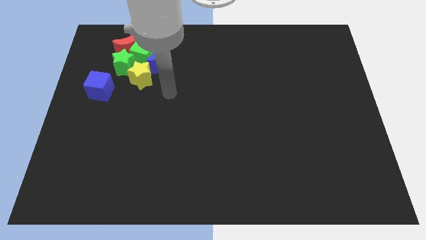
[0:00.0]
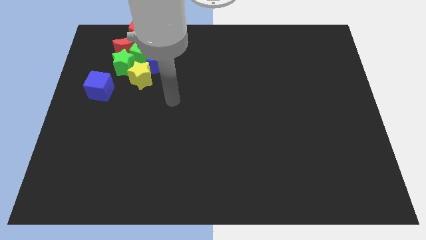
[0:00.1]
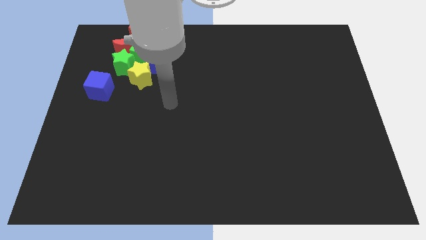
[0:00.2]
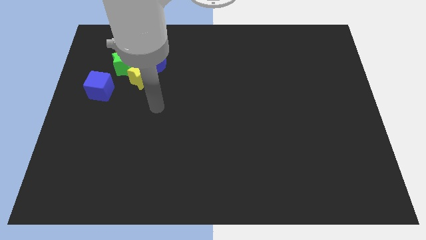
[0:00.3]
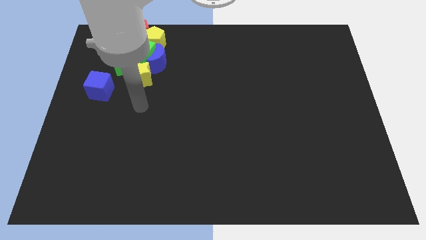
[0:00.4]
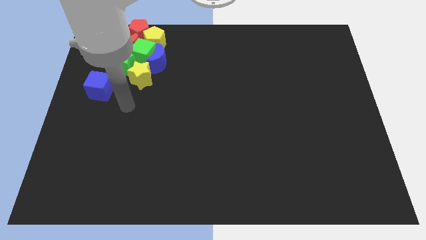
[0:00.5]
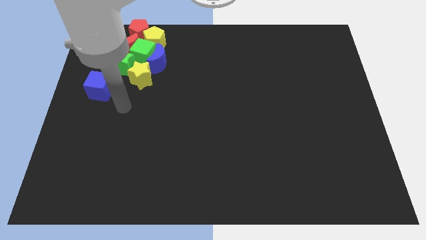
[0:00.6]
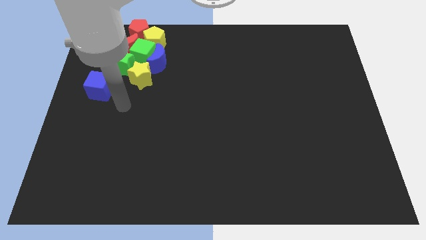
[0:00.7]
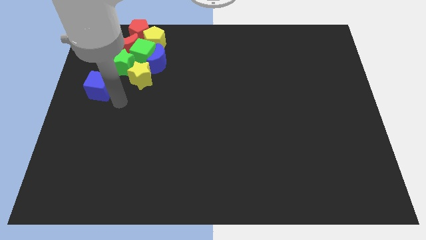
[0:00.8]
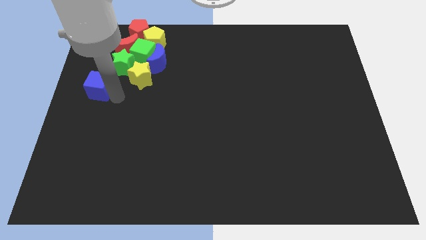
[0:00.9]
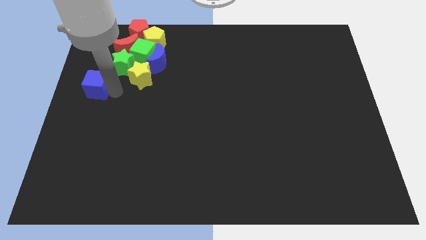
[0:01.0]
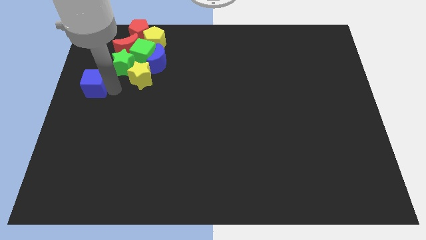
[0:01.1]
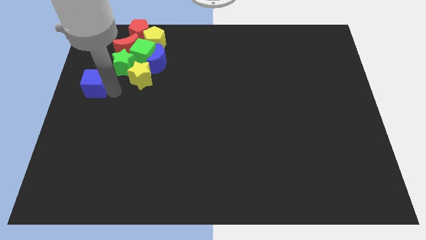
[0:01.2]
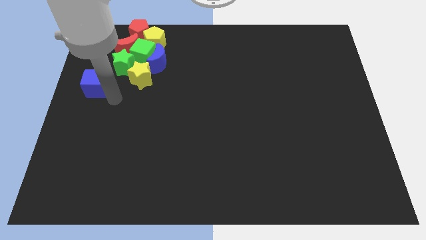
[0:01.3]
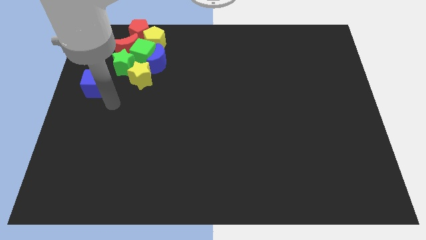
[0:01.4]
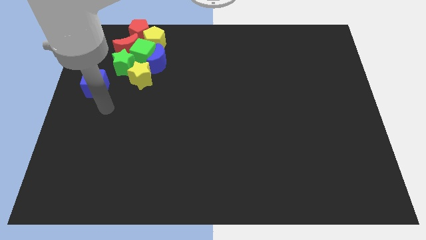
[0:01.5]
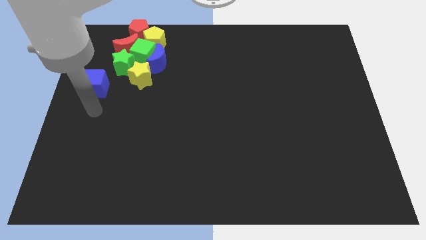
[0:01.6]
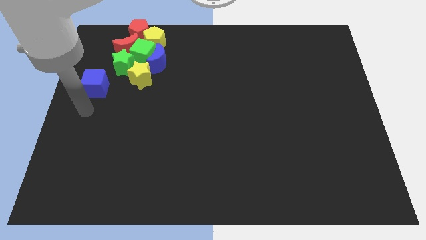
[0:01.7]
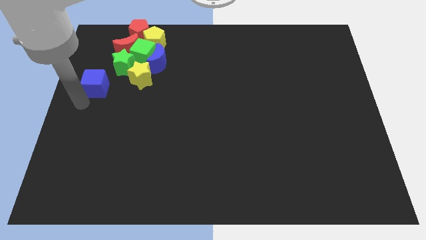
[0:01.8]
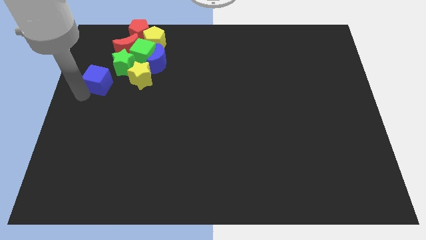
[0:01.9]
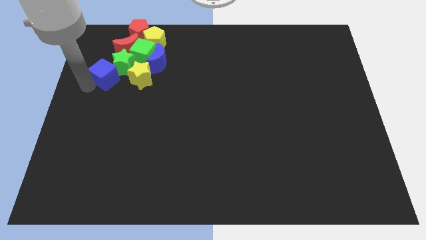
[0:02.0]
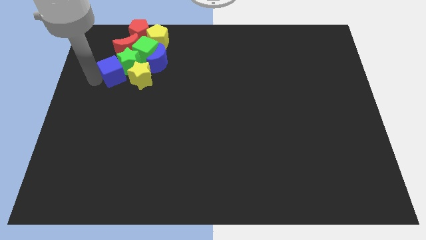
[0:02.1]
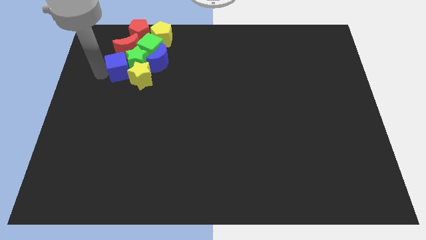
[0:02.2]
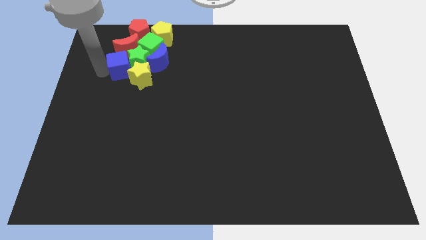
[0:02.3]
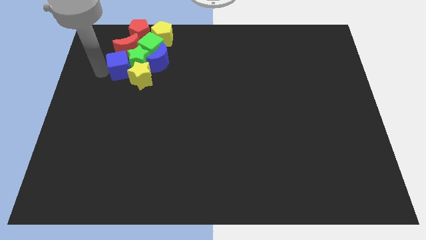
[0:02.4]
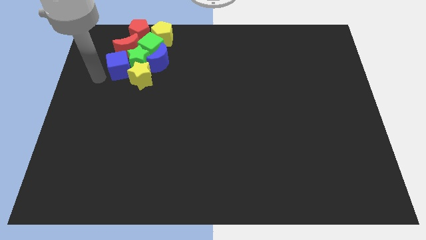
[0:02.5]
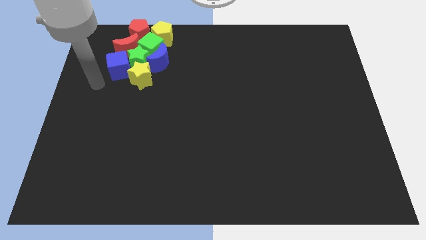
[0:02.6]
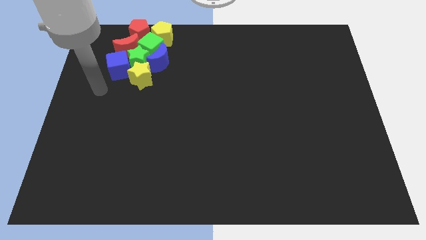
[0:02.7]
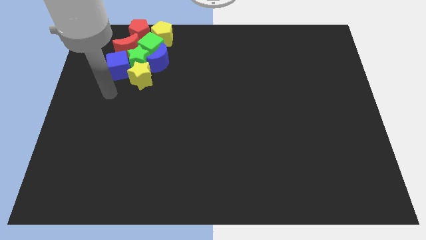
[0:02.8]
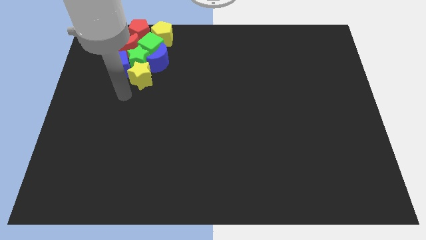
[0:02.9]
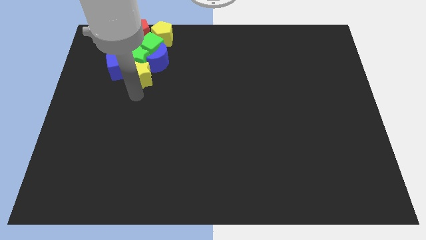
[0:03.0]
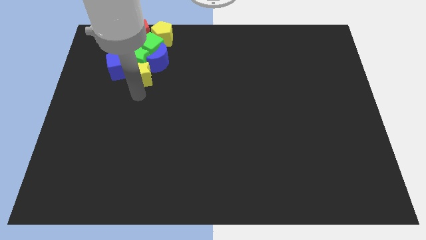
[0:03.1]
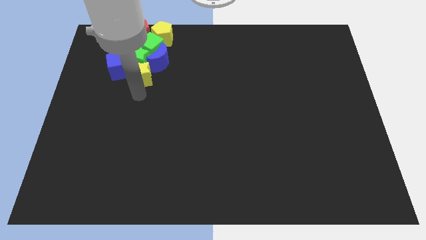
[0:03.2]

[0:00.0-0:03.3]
move the blue cube into the group of blocks

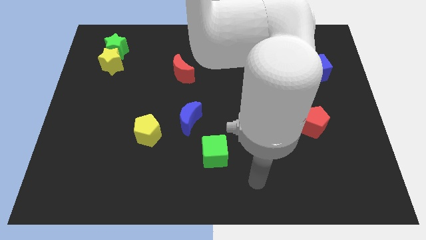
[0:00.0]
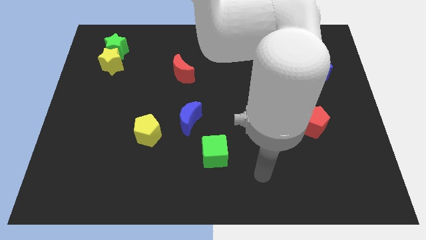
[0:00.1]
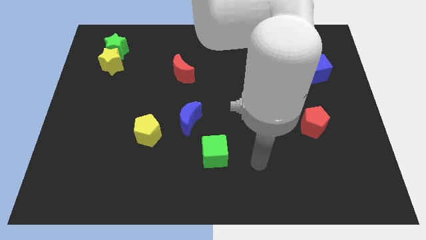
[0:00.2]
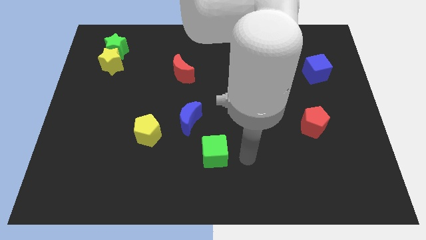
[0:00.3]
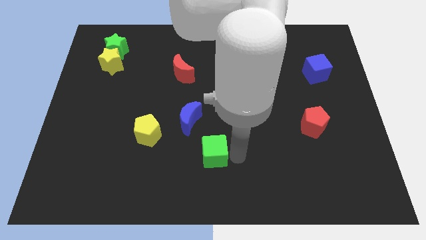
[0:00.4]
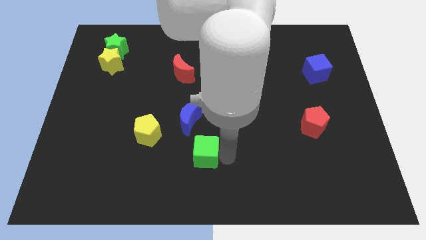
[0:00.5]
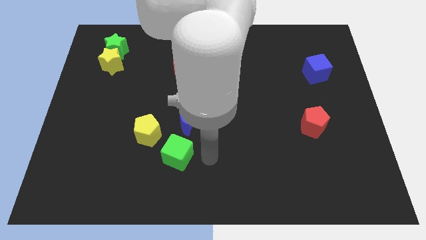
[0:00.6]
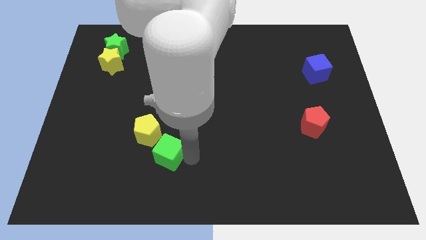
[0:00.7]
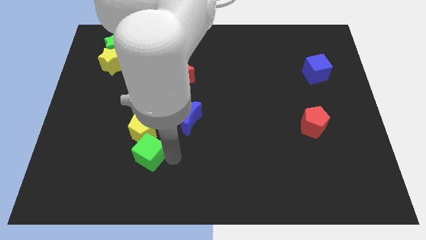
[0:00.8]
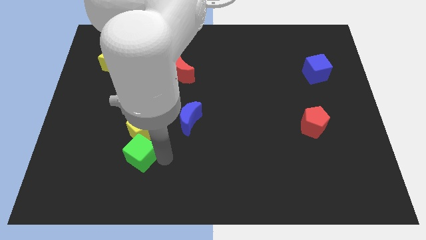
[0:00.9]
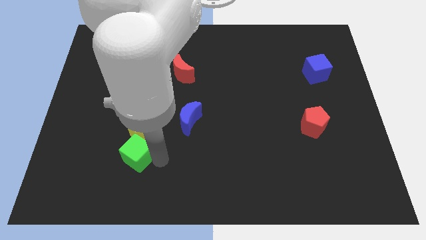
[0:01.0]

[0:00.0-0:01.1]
push the green cube close to the yellow pentagon

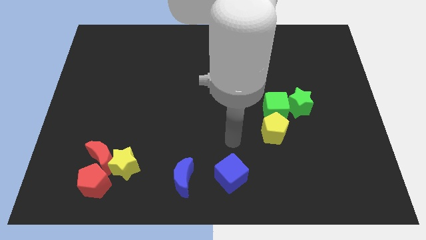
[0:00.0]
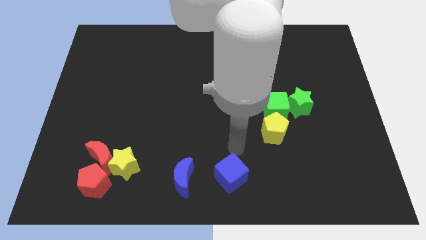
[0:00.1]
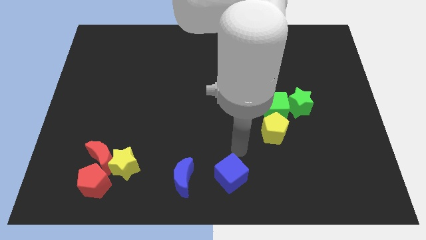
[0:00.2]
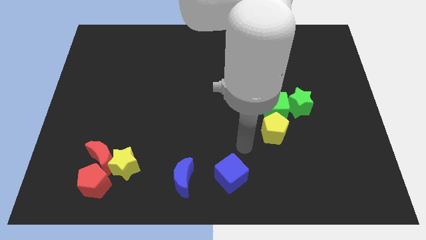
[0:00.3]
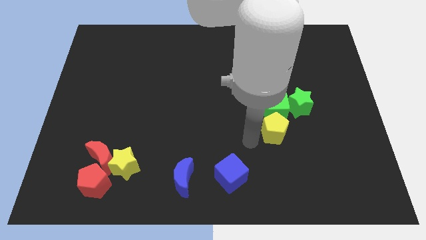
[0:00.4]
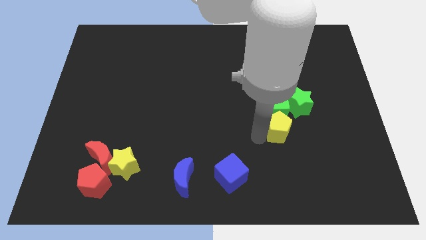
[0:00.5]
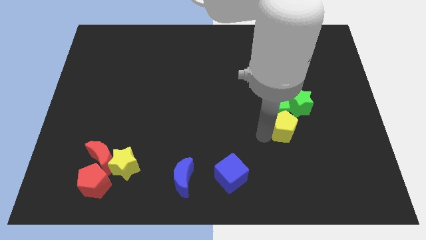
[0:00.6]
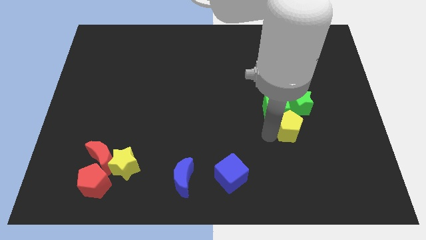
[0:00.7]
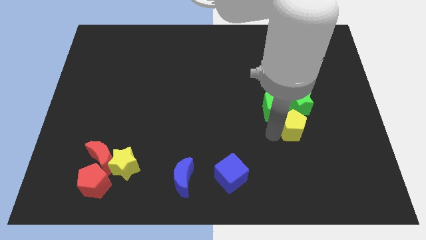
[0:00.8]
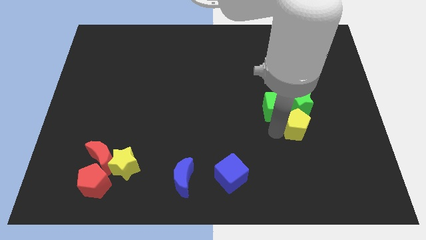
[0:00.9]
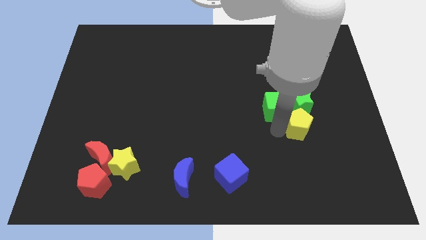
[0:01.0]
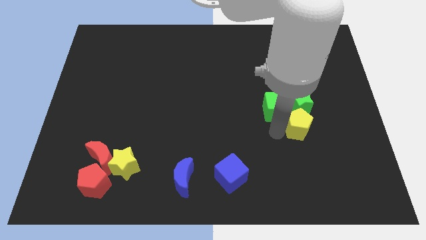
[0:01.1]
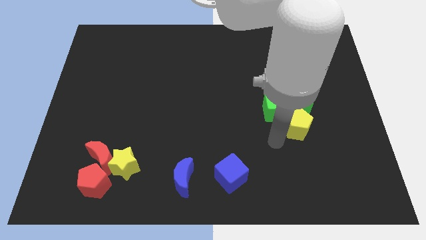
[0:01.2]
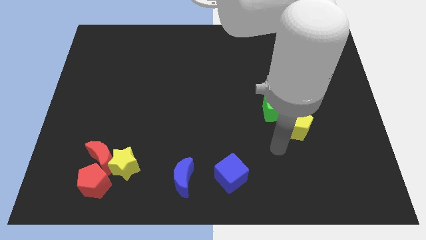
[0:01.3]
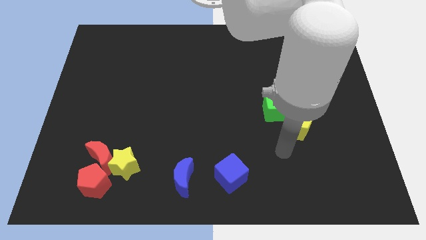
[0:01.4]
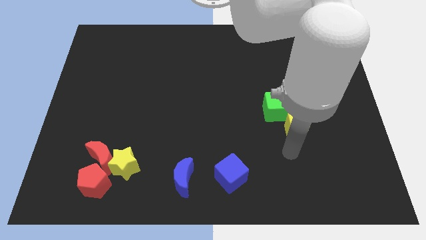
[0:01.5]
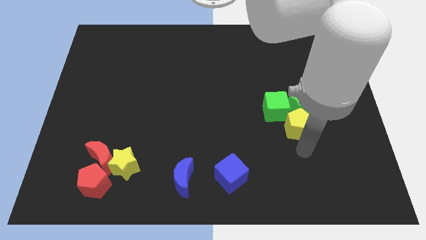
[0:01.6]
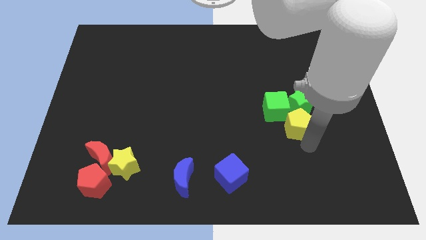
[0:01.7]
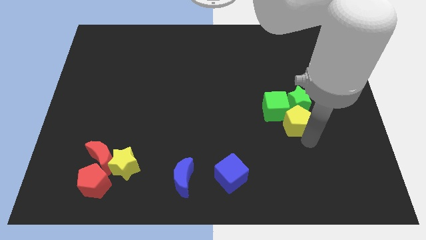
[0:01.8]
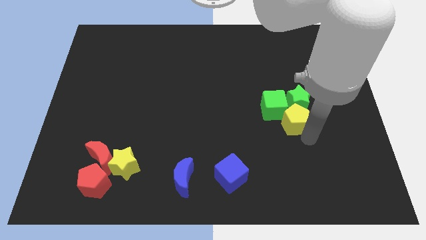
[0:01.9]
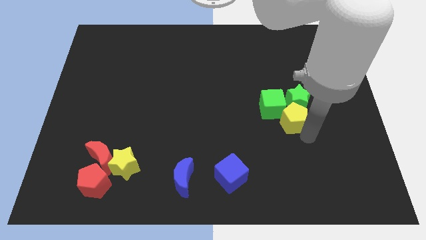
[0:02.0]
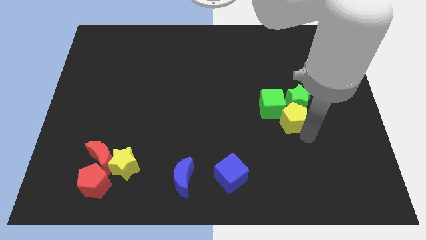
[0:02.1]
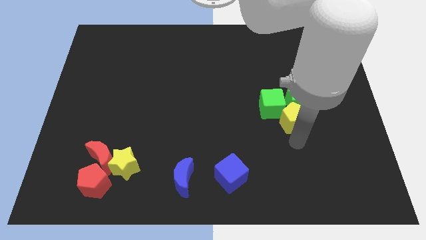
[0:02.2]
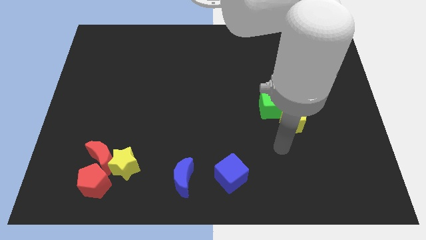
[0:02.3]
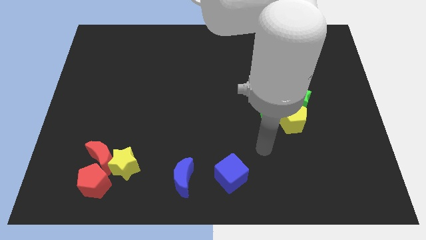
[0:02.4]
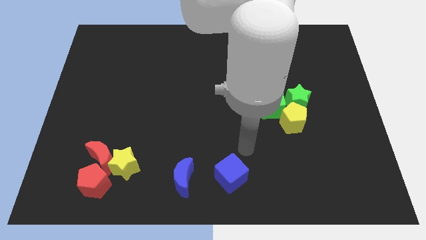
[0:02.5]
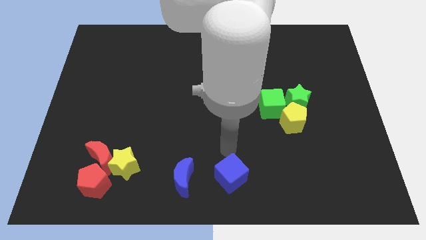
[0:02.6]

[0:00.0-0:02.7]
move the yellow pentagon to the bottom of the green star

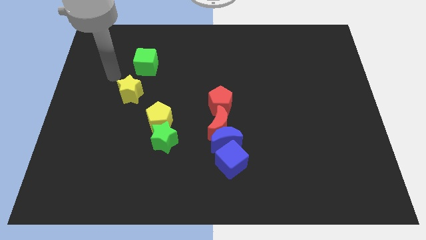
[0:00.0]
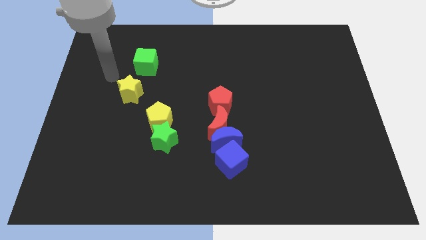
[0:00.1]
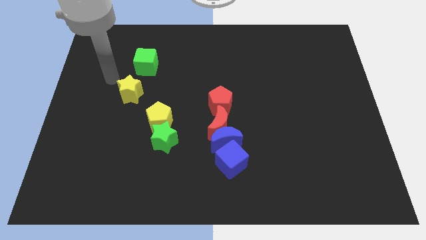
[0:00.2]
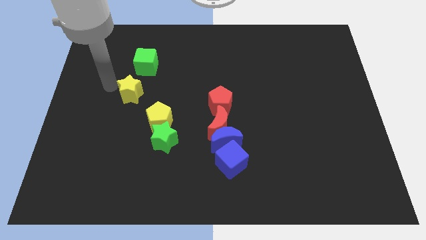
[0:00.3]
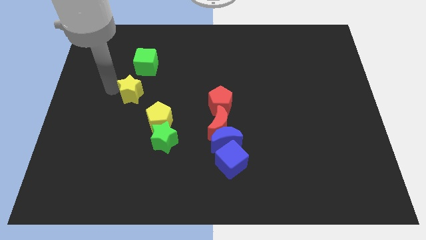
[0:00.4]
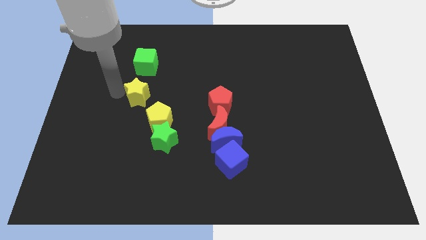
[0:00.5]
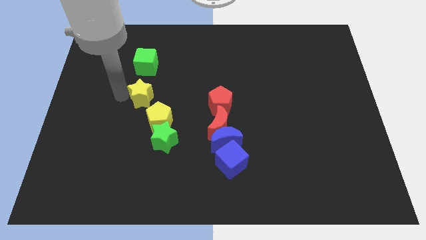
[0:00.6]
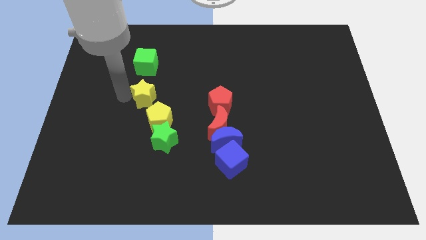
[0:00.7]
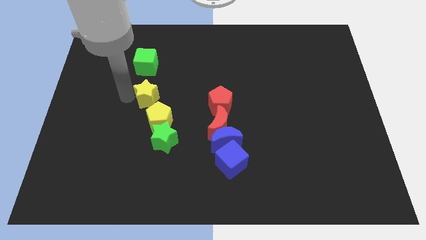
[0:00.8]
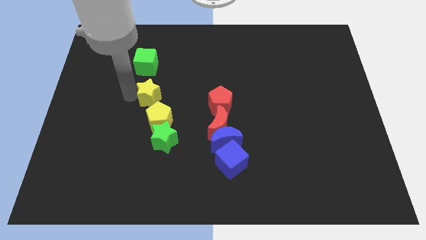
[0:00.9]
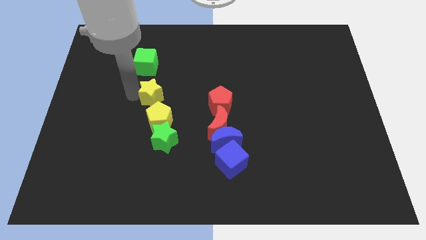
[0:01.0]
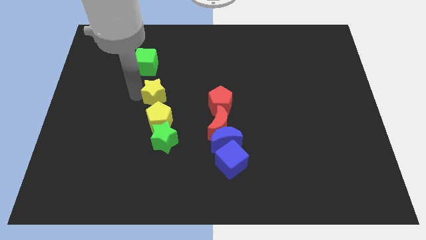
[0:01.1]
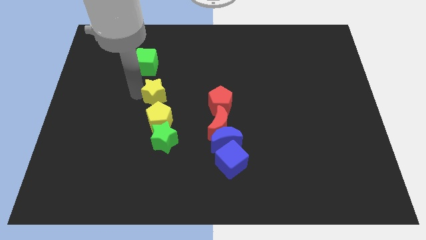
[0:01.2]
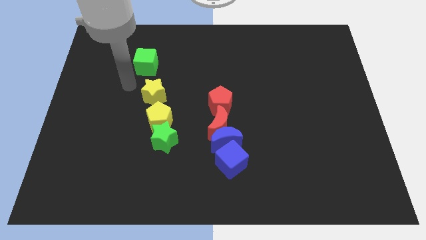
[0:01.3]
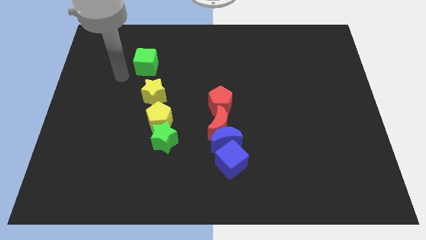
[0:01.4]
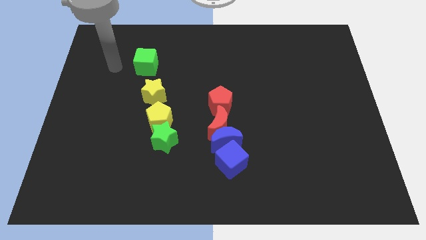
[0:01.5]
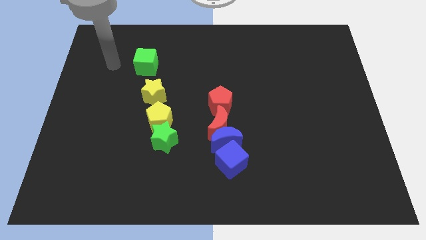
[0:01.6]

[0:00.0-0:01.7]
move the yellow star diagonally in between the green cube and yellow pentagon

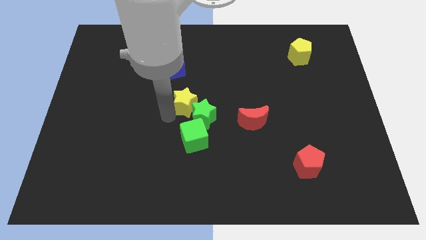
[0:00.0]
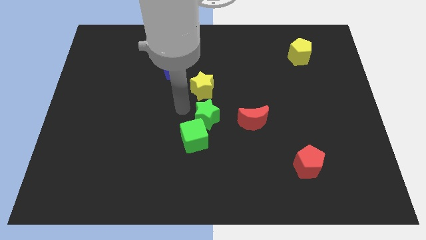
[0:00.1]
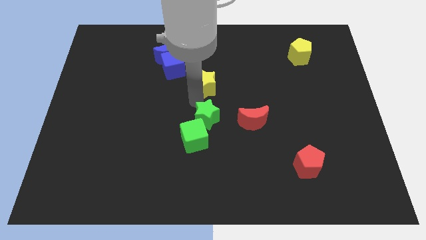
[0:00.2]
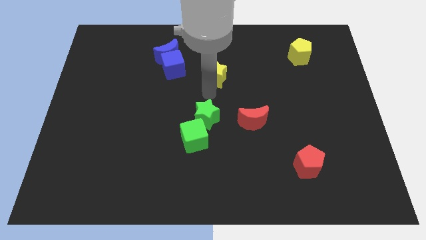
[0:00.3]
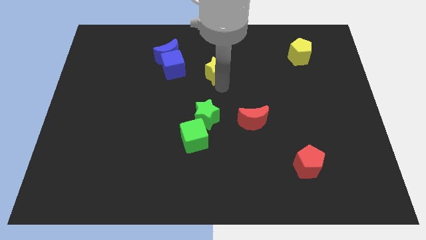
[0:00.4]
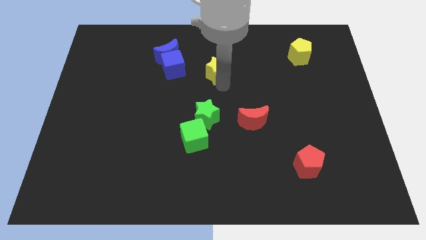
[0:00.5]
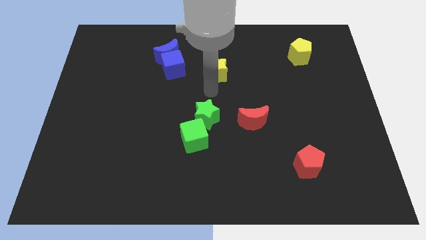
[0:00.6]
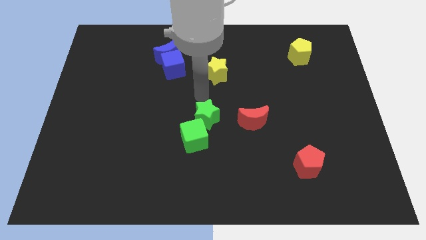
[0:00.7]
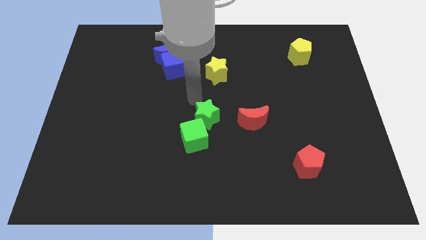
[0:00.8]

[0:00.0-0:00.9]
separate the yellow star from the green star
